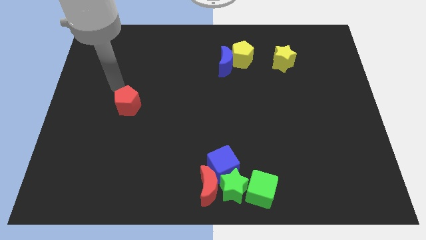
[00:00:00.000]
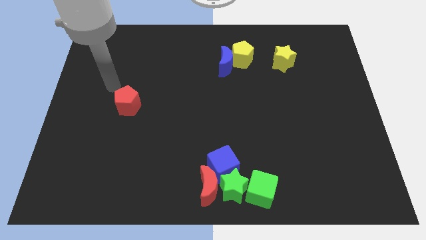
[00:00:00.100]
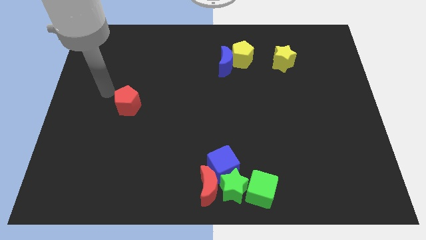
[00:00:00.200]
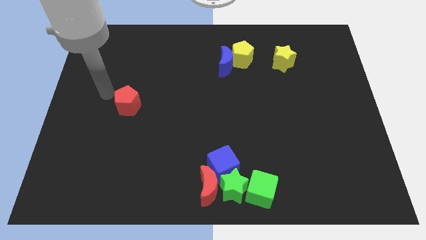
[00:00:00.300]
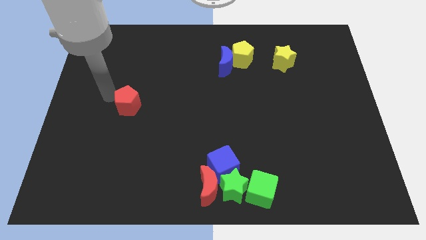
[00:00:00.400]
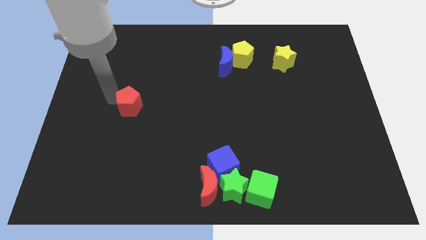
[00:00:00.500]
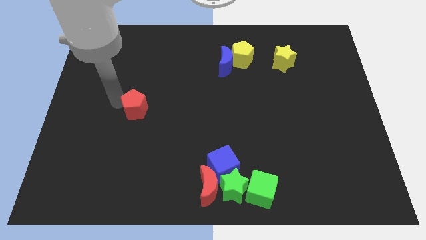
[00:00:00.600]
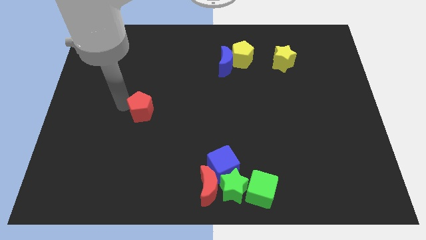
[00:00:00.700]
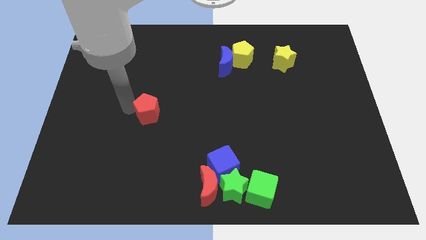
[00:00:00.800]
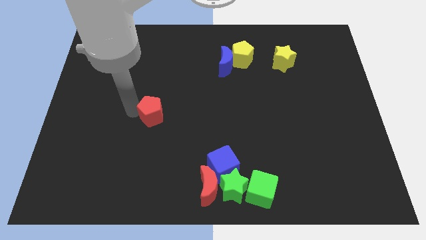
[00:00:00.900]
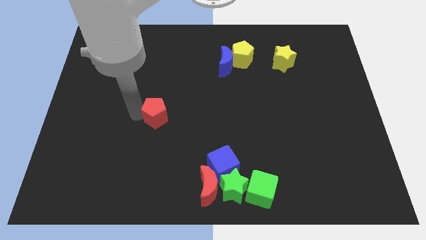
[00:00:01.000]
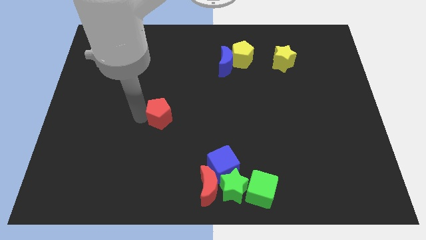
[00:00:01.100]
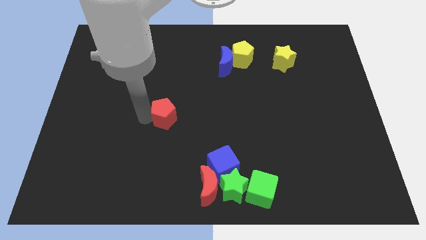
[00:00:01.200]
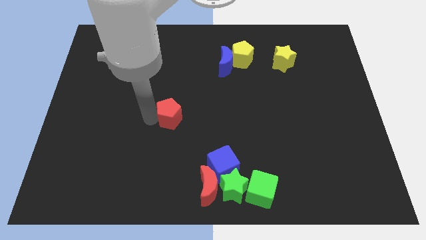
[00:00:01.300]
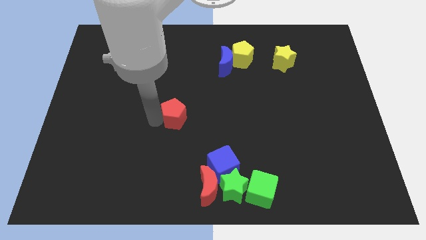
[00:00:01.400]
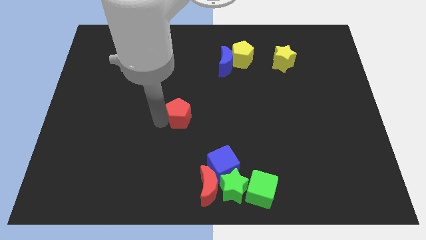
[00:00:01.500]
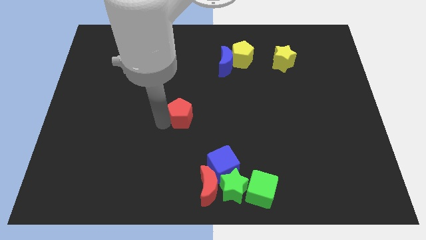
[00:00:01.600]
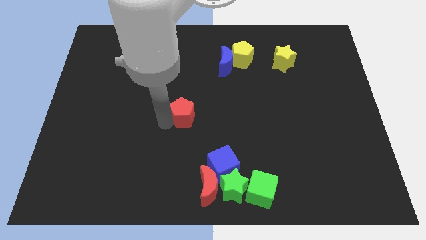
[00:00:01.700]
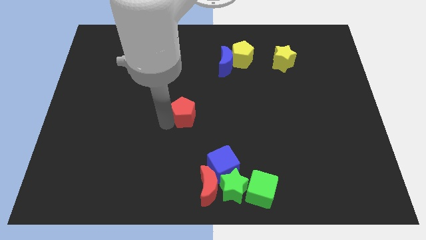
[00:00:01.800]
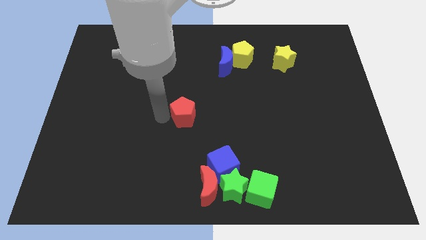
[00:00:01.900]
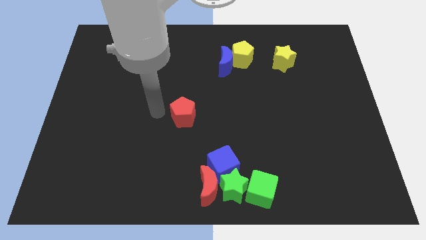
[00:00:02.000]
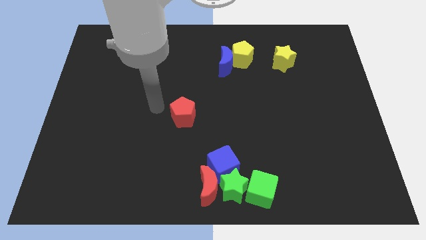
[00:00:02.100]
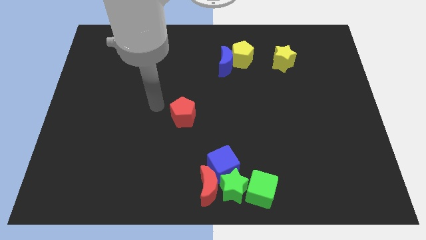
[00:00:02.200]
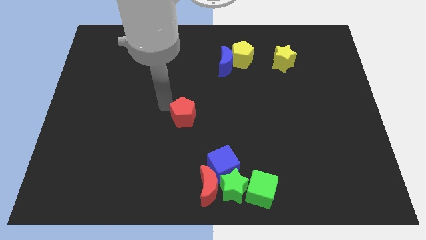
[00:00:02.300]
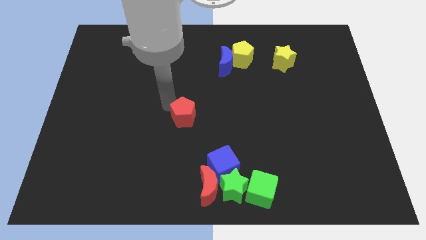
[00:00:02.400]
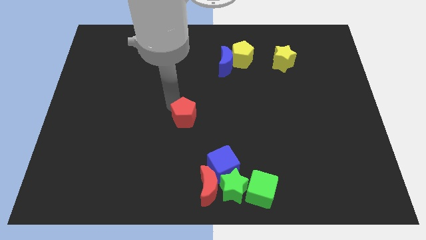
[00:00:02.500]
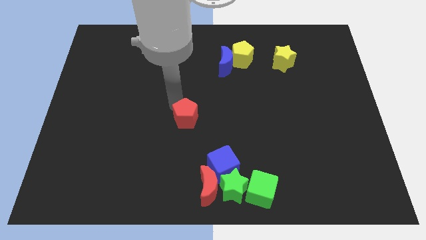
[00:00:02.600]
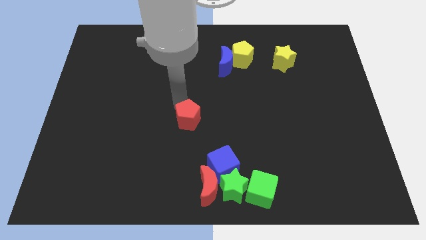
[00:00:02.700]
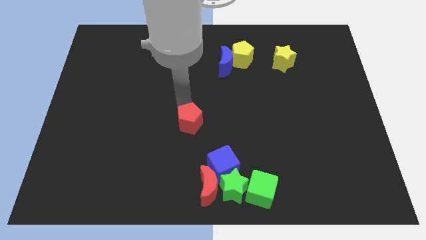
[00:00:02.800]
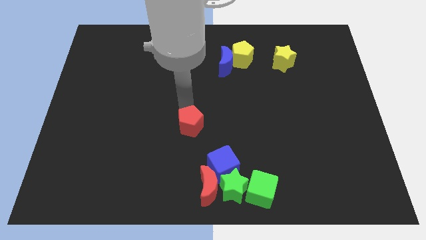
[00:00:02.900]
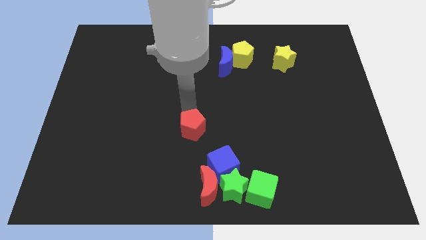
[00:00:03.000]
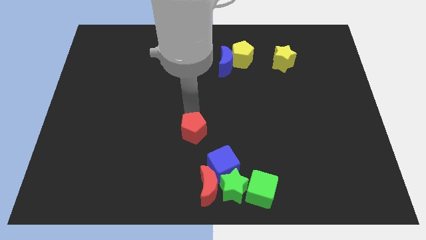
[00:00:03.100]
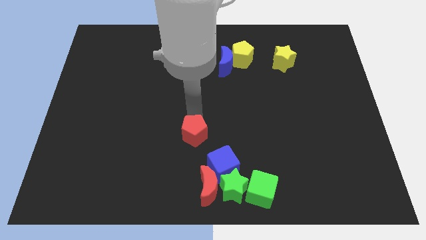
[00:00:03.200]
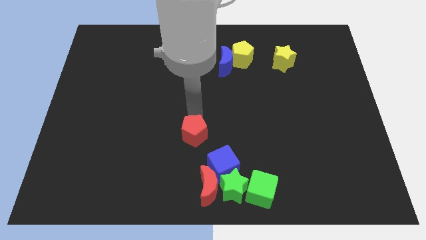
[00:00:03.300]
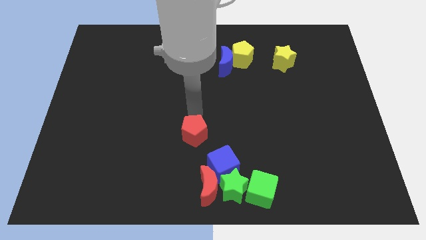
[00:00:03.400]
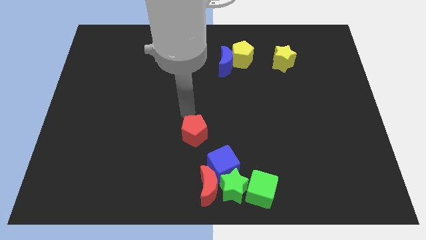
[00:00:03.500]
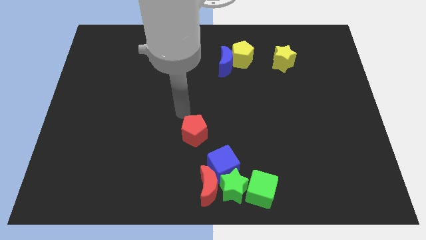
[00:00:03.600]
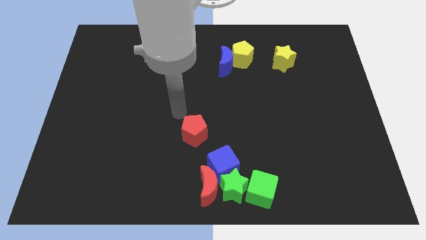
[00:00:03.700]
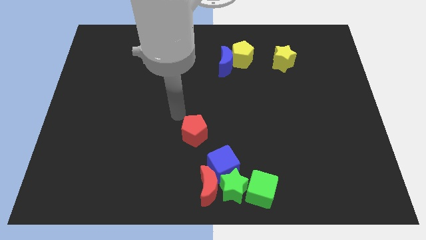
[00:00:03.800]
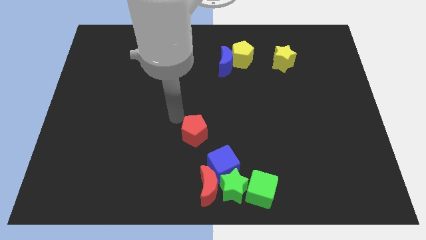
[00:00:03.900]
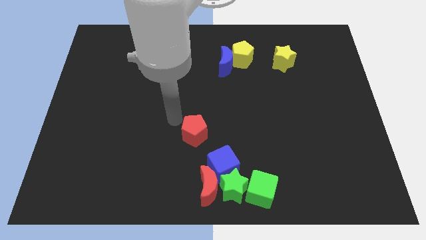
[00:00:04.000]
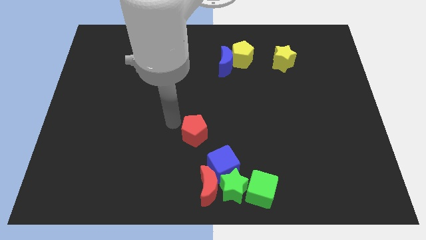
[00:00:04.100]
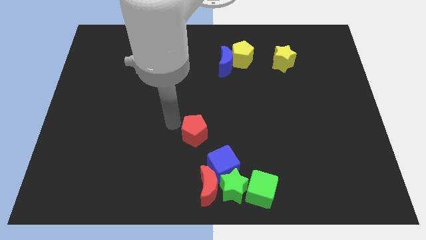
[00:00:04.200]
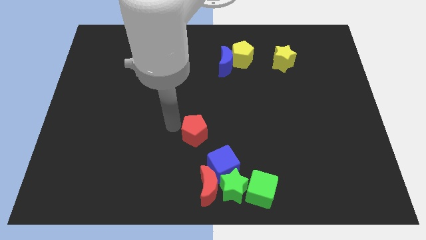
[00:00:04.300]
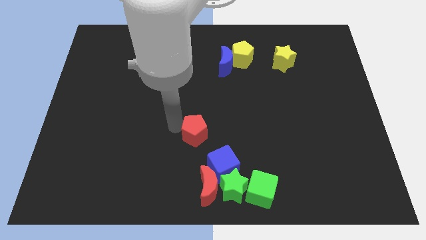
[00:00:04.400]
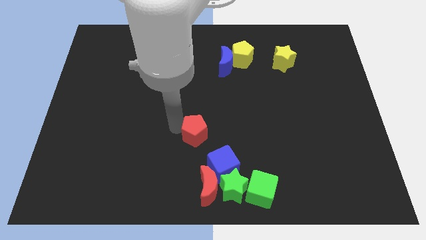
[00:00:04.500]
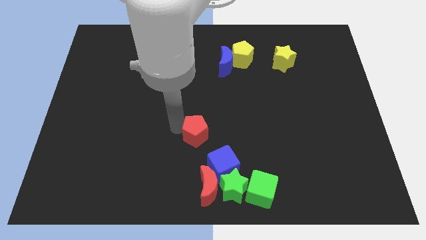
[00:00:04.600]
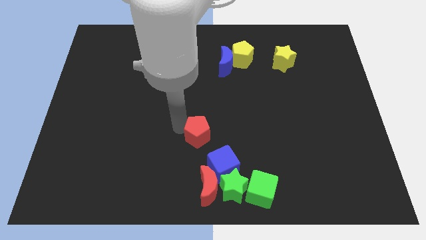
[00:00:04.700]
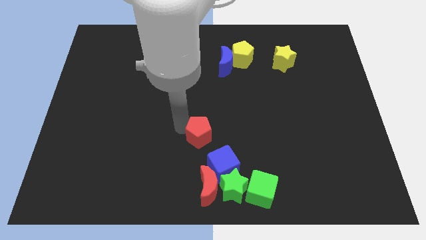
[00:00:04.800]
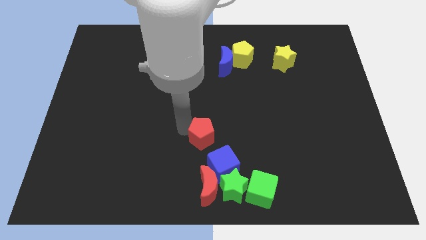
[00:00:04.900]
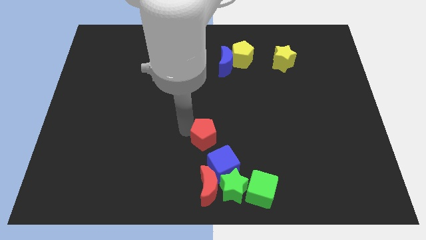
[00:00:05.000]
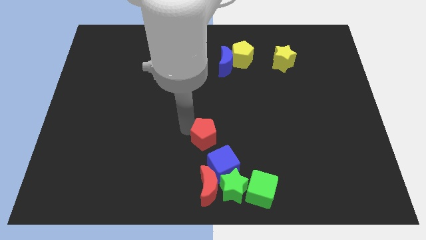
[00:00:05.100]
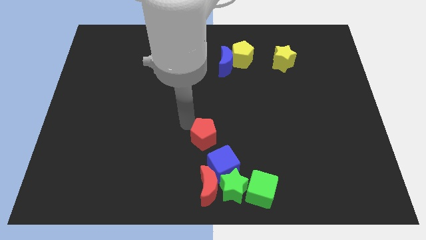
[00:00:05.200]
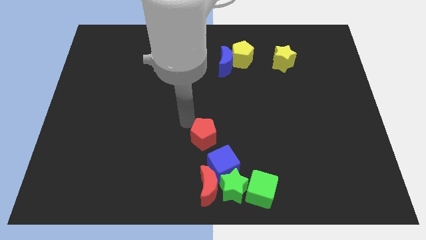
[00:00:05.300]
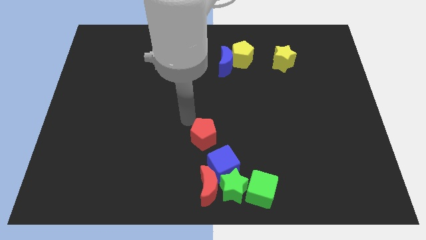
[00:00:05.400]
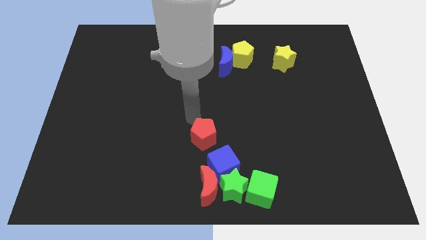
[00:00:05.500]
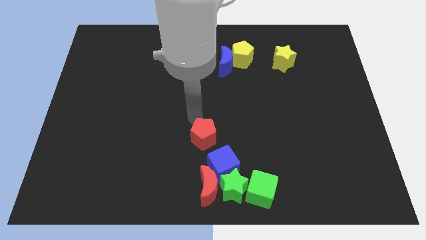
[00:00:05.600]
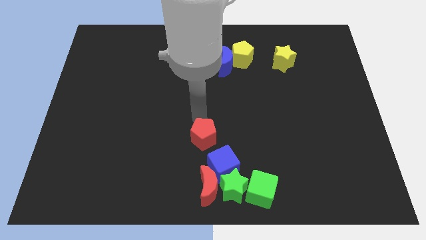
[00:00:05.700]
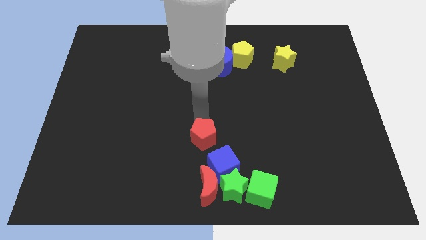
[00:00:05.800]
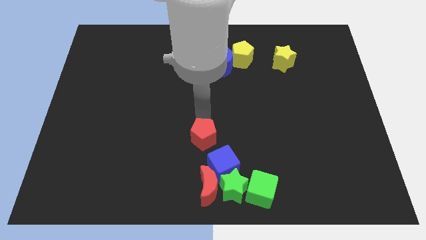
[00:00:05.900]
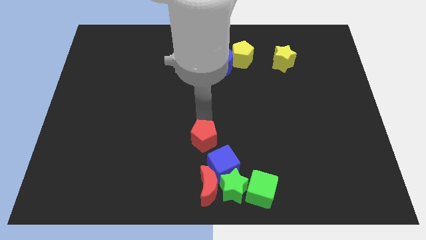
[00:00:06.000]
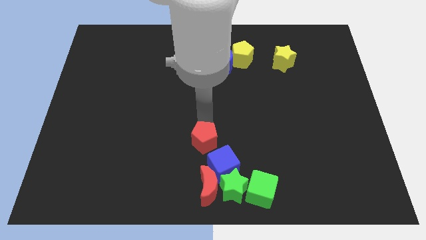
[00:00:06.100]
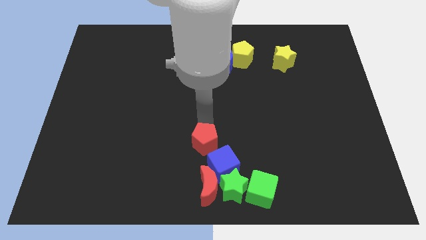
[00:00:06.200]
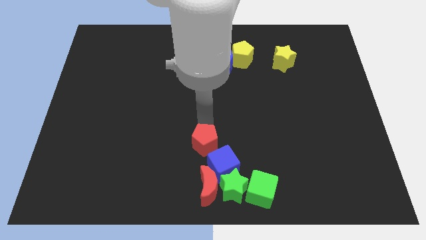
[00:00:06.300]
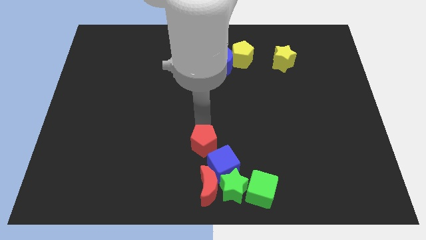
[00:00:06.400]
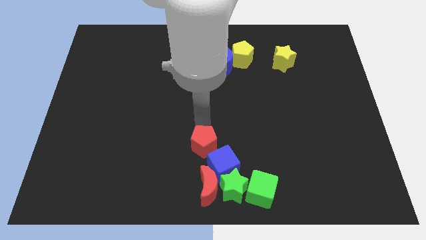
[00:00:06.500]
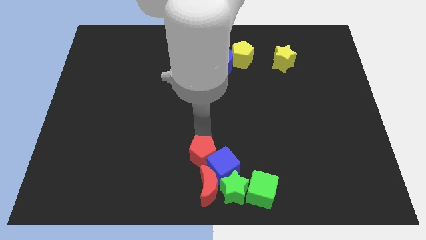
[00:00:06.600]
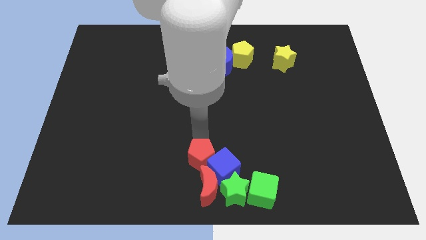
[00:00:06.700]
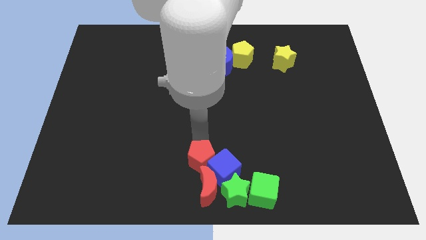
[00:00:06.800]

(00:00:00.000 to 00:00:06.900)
move the red pentagon into group of blocks

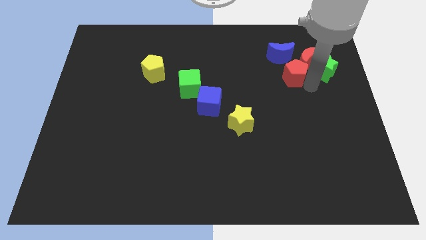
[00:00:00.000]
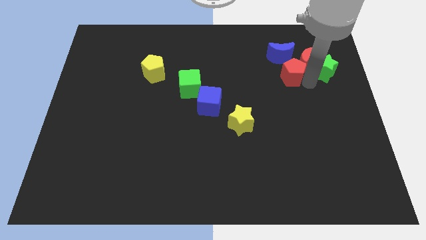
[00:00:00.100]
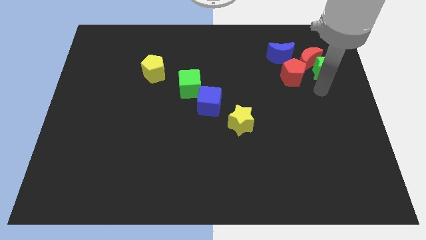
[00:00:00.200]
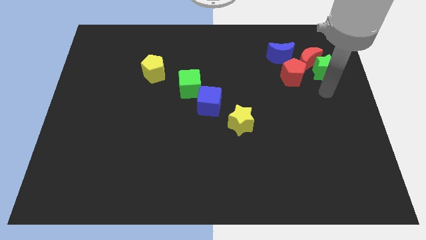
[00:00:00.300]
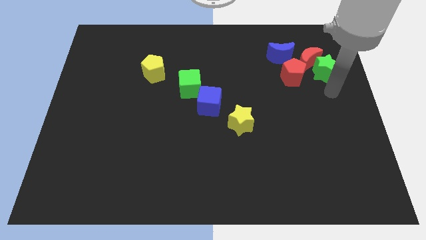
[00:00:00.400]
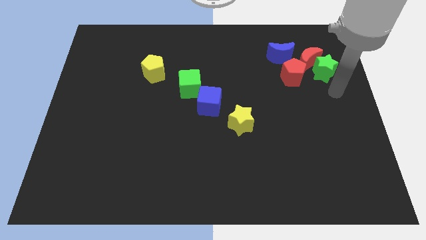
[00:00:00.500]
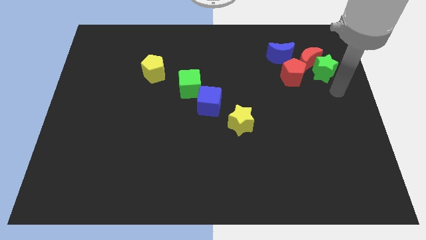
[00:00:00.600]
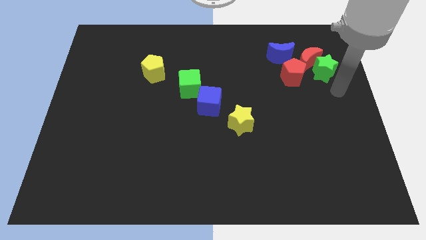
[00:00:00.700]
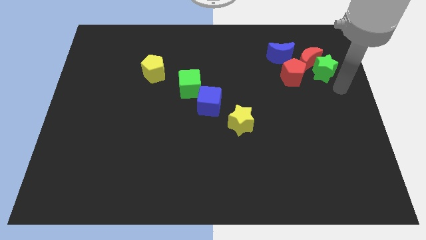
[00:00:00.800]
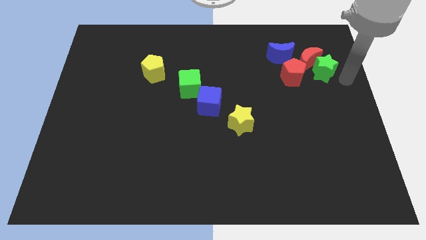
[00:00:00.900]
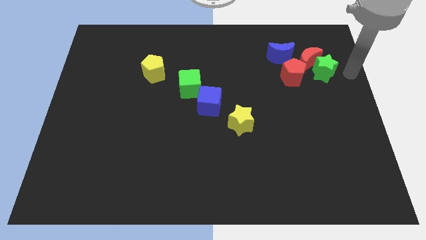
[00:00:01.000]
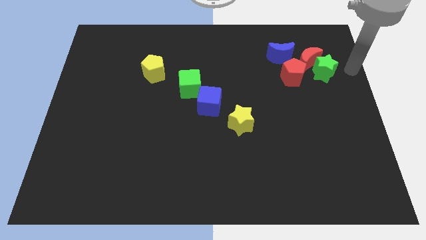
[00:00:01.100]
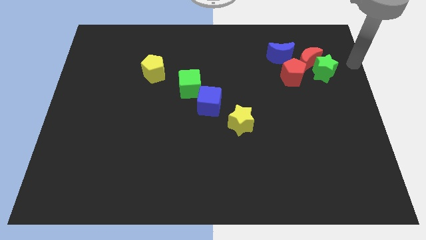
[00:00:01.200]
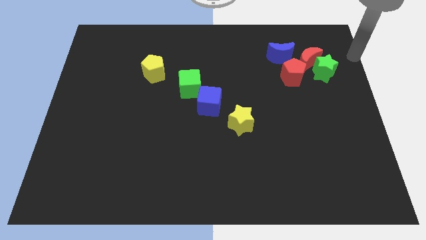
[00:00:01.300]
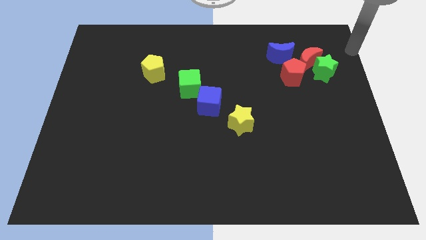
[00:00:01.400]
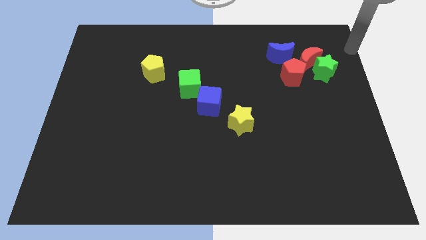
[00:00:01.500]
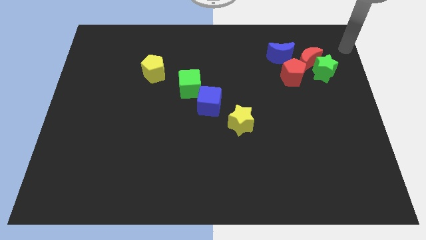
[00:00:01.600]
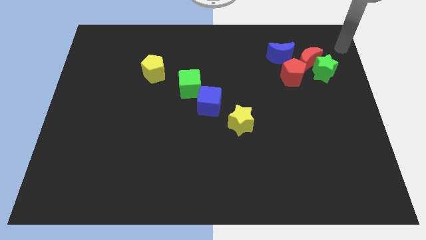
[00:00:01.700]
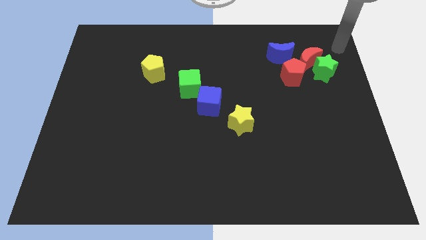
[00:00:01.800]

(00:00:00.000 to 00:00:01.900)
move your arm away from red pentagon

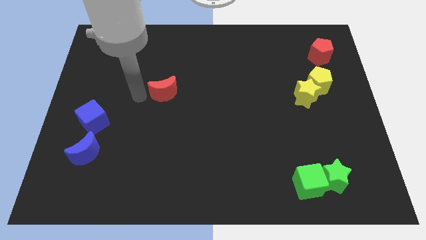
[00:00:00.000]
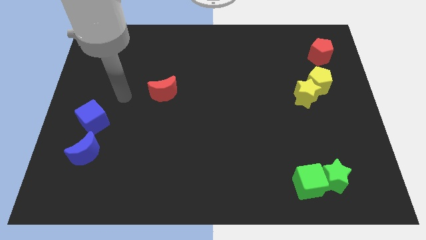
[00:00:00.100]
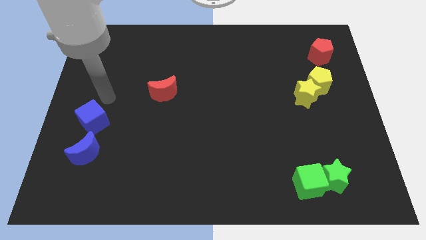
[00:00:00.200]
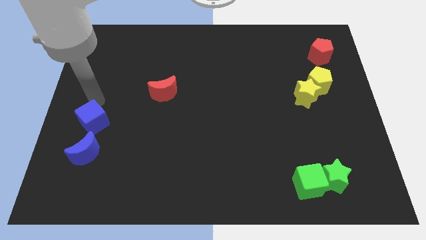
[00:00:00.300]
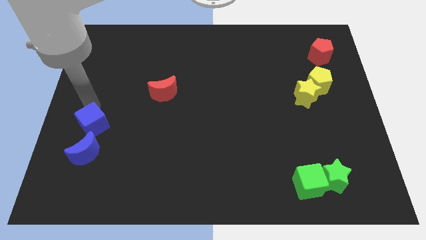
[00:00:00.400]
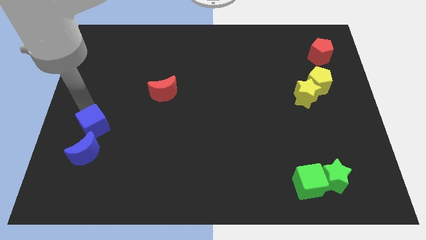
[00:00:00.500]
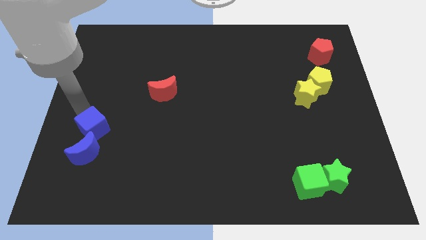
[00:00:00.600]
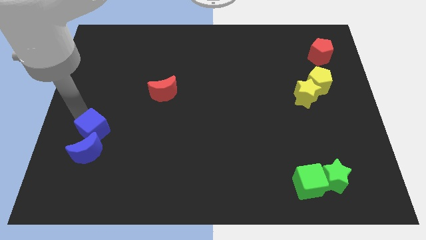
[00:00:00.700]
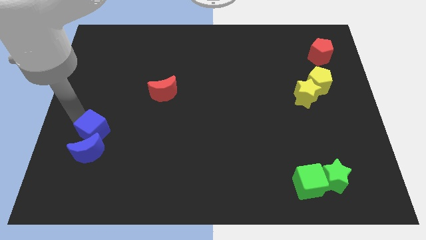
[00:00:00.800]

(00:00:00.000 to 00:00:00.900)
move your arm near to the blue cube
